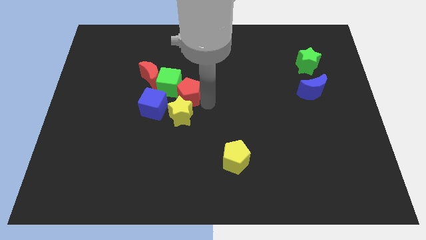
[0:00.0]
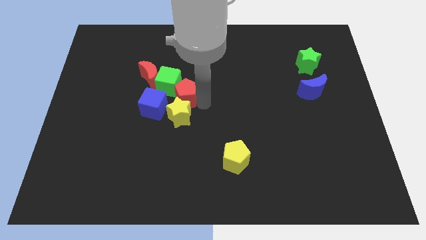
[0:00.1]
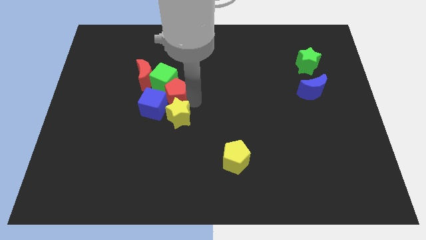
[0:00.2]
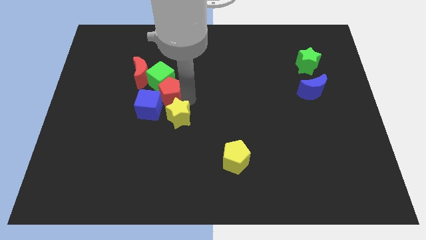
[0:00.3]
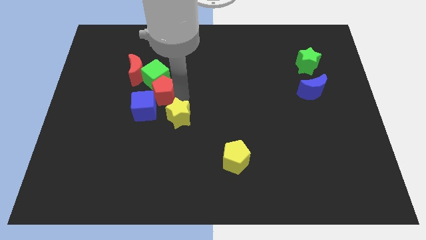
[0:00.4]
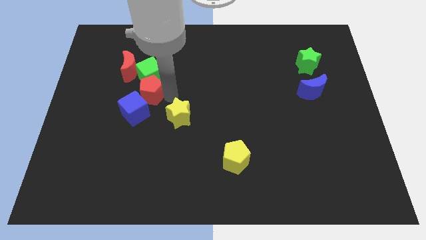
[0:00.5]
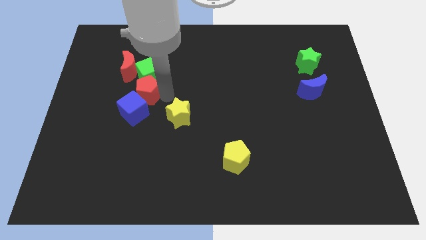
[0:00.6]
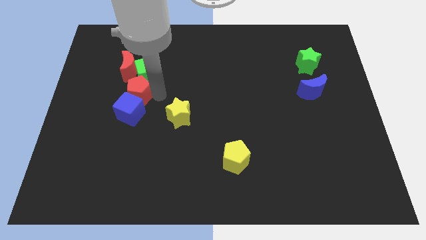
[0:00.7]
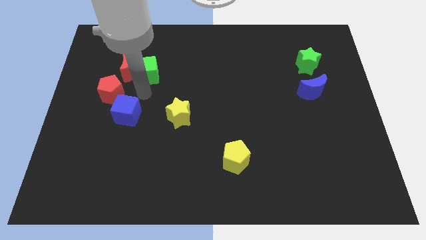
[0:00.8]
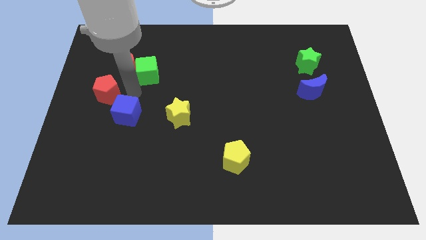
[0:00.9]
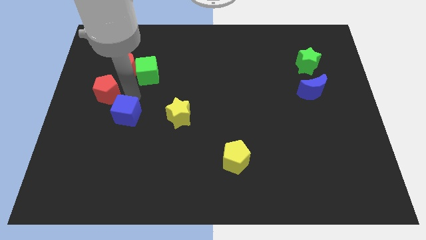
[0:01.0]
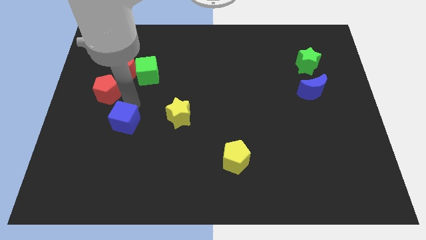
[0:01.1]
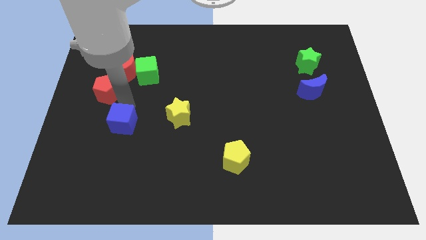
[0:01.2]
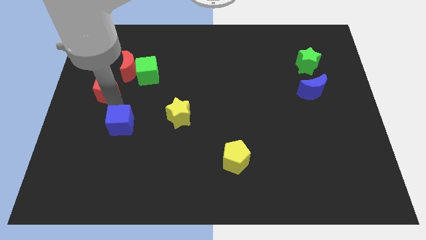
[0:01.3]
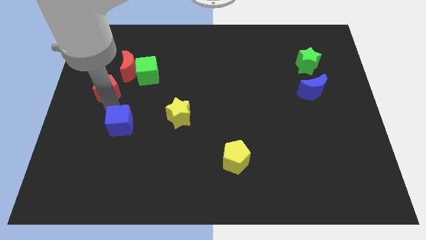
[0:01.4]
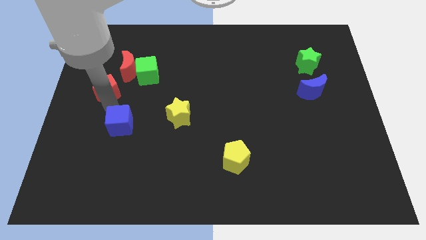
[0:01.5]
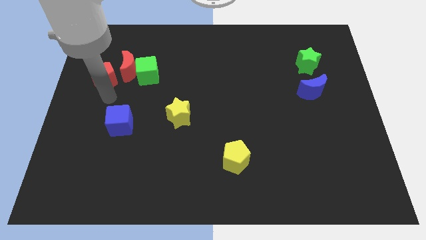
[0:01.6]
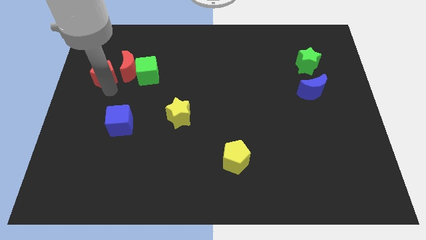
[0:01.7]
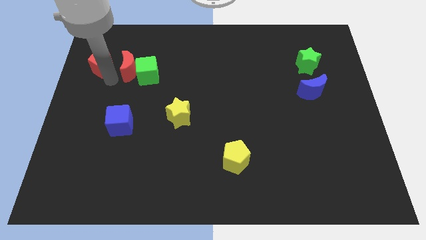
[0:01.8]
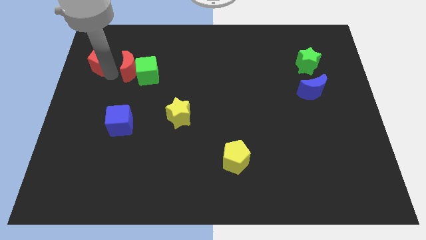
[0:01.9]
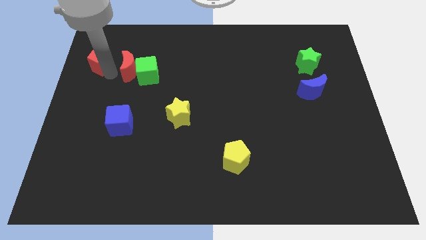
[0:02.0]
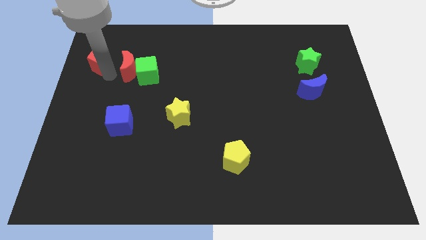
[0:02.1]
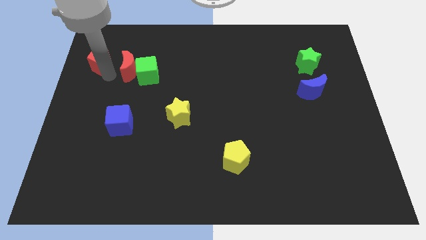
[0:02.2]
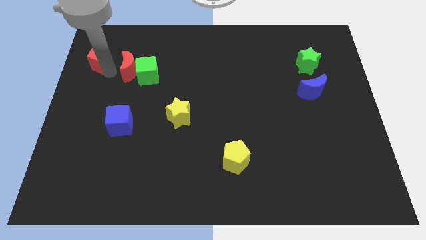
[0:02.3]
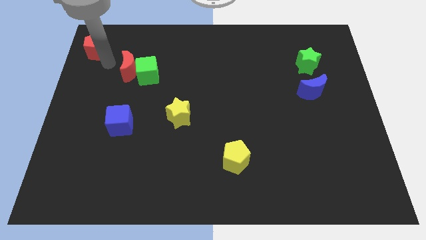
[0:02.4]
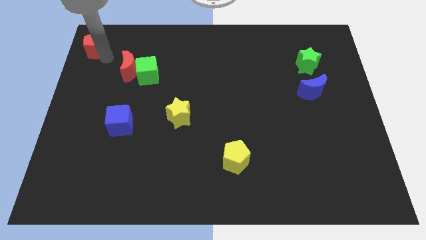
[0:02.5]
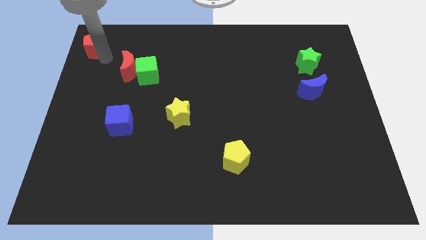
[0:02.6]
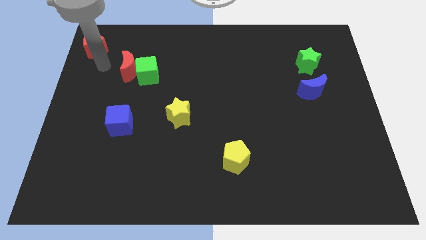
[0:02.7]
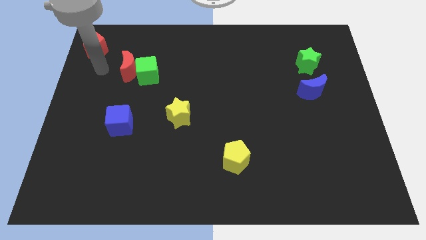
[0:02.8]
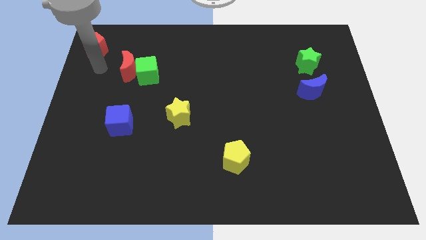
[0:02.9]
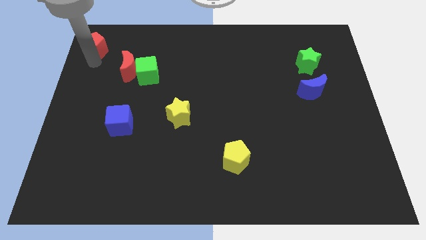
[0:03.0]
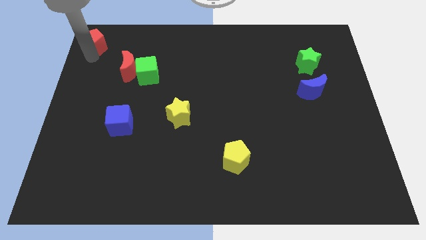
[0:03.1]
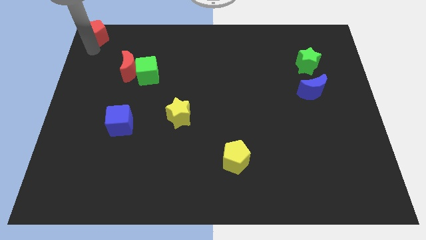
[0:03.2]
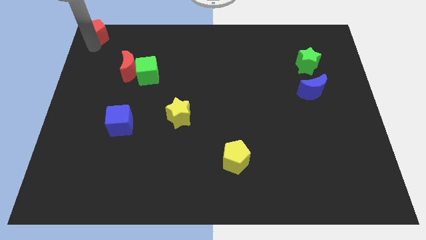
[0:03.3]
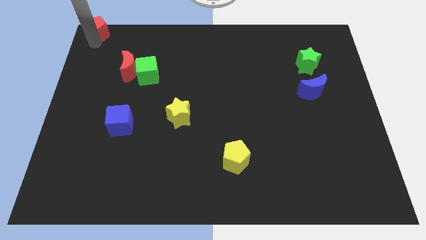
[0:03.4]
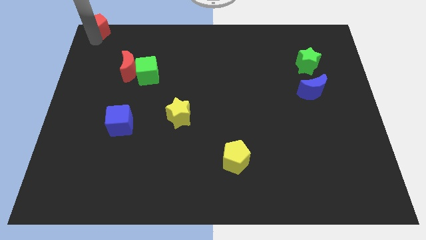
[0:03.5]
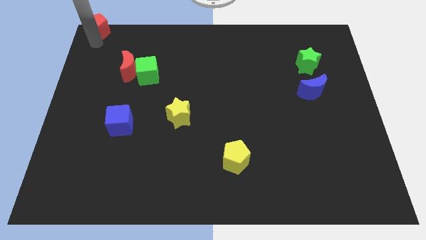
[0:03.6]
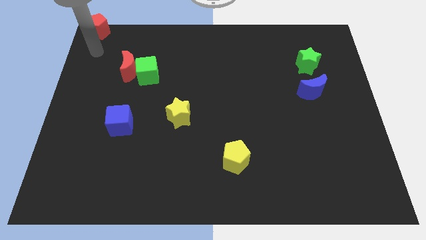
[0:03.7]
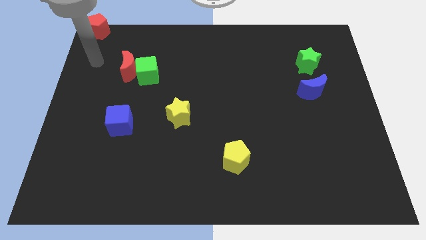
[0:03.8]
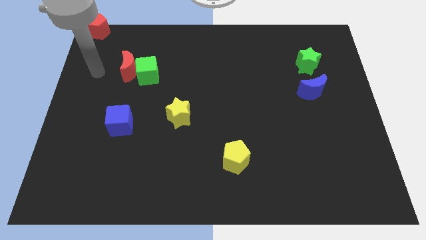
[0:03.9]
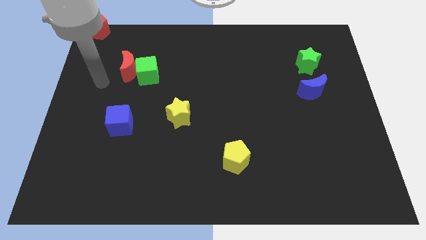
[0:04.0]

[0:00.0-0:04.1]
separate red pentagon from group of block

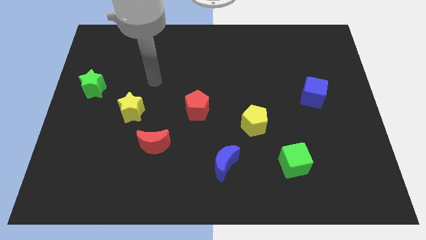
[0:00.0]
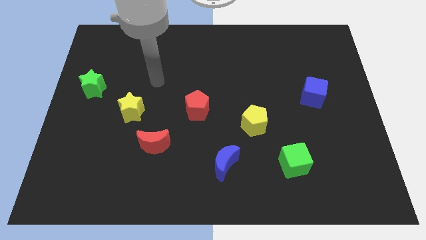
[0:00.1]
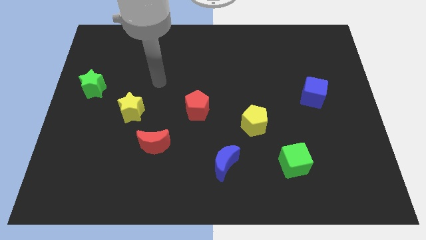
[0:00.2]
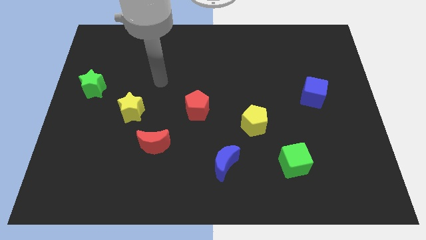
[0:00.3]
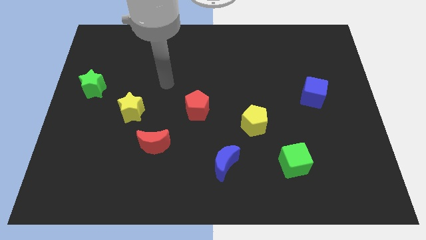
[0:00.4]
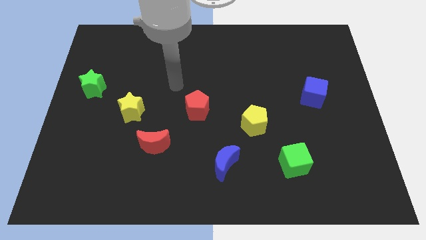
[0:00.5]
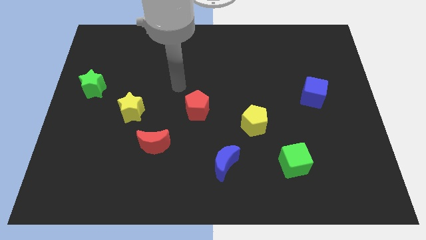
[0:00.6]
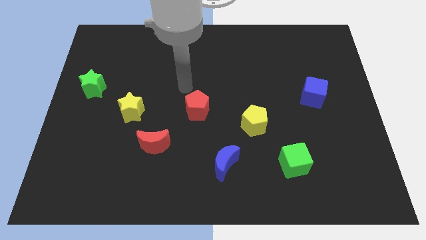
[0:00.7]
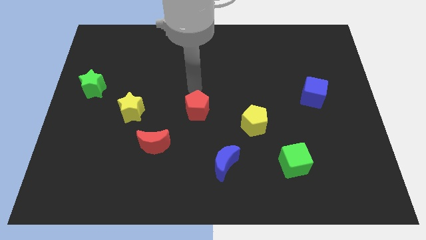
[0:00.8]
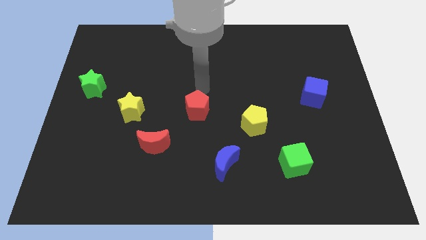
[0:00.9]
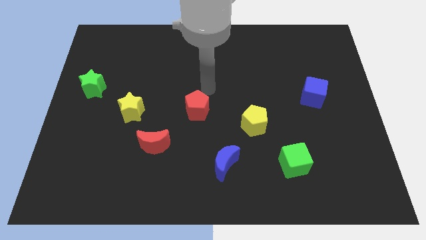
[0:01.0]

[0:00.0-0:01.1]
point your arm above the red pentagon

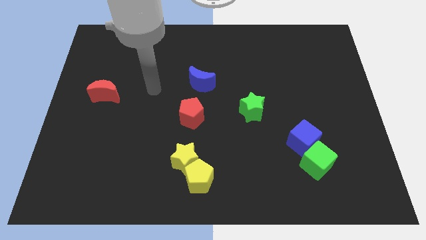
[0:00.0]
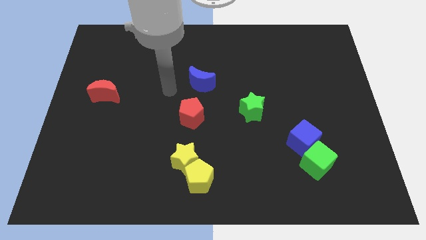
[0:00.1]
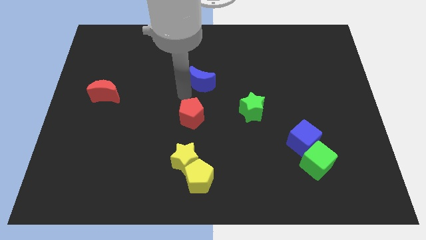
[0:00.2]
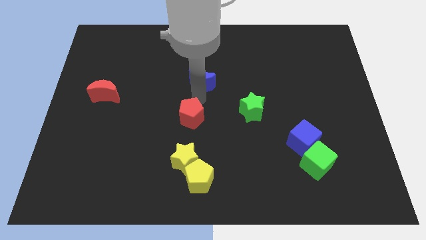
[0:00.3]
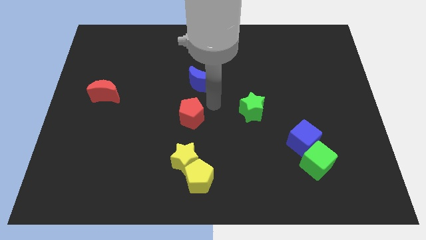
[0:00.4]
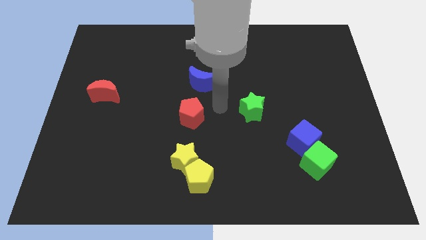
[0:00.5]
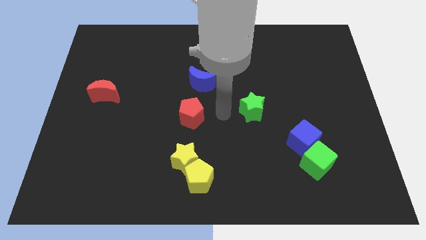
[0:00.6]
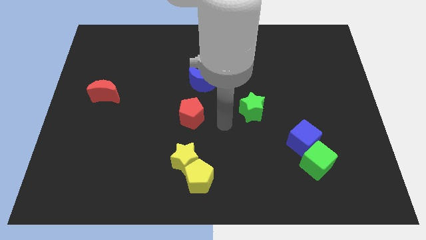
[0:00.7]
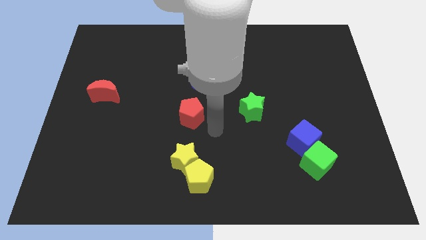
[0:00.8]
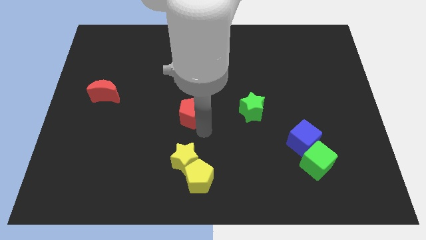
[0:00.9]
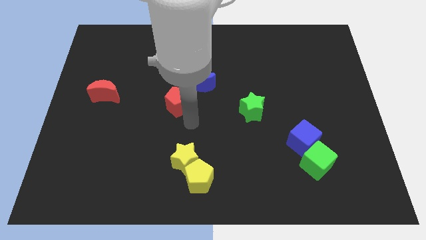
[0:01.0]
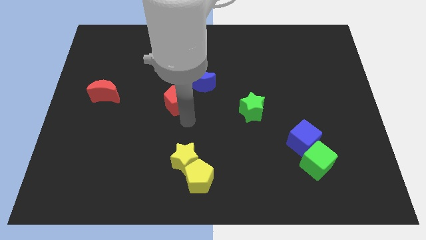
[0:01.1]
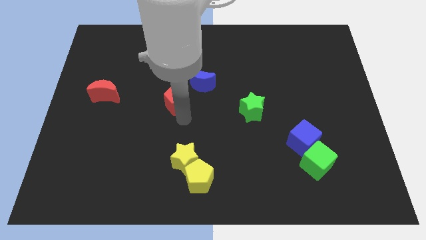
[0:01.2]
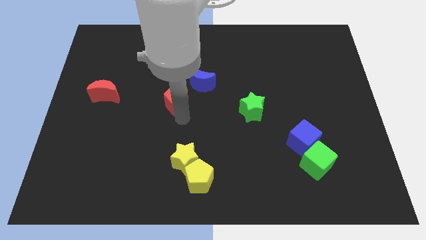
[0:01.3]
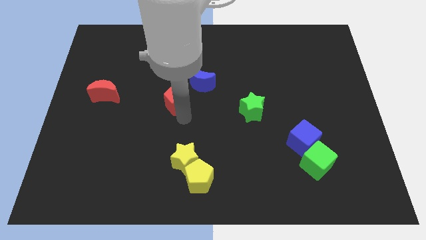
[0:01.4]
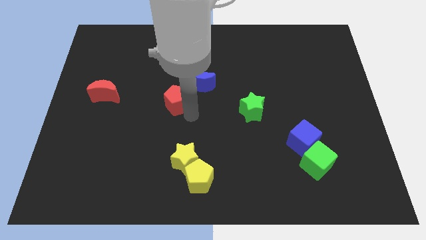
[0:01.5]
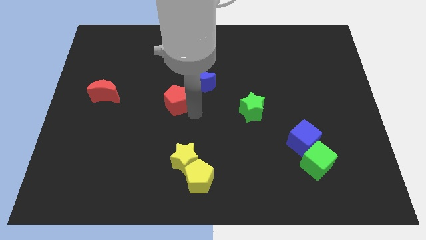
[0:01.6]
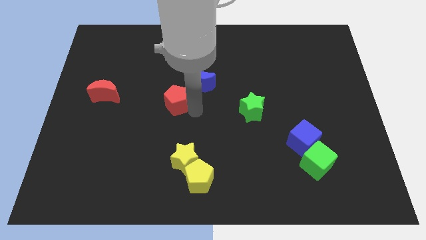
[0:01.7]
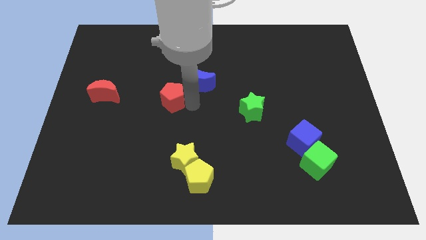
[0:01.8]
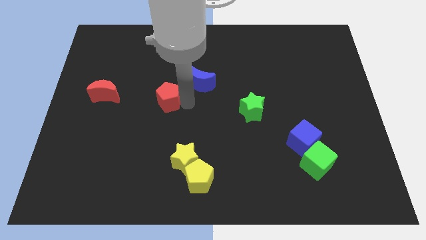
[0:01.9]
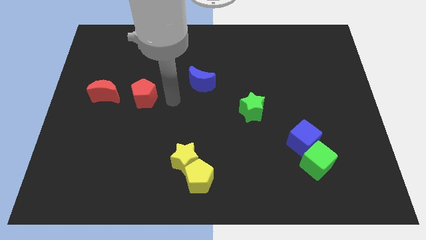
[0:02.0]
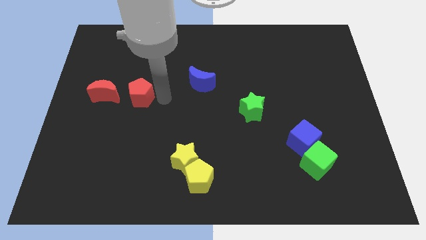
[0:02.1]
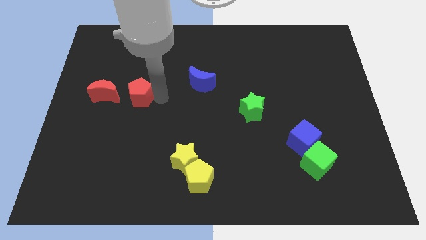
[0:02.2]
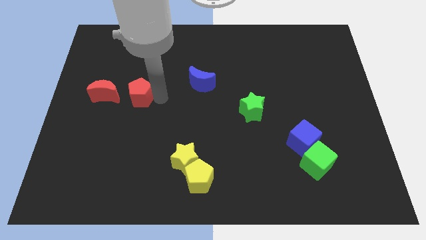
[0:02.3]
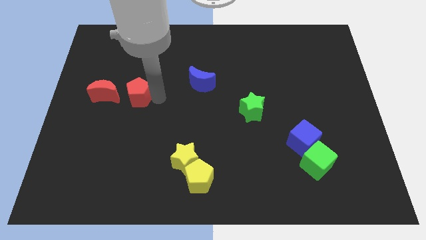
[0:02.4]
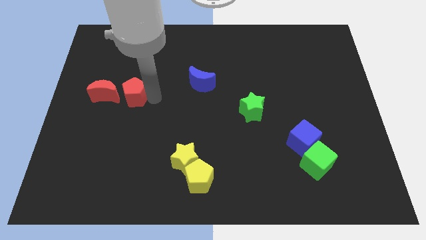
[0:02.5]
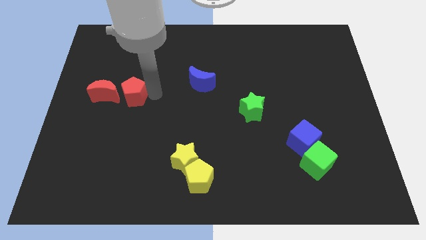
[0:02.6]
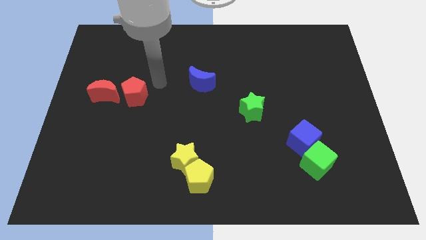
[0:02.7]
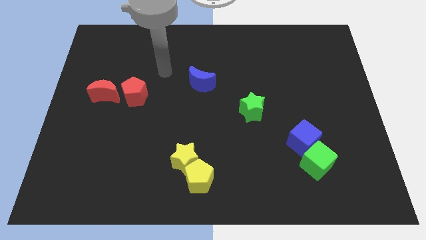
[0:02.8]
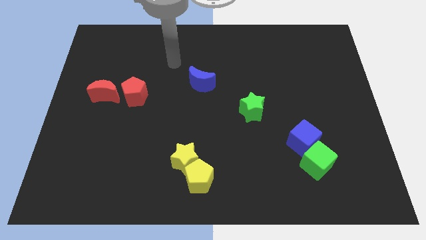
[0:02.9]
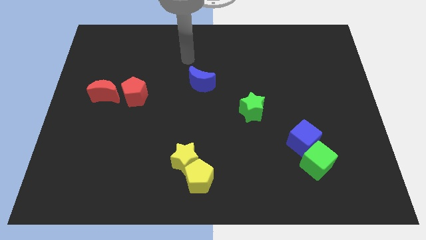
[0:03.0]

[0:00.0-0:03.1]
move red pentagon to the right of the red crescent

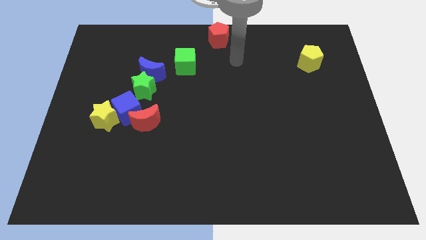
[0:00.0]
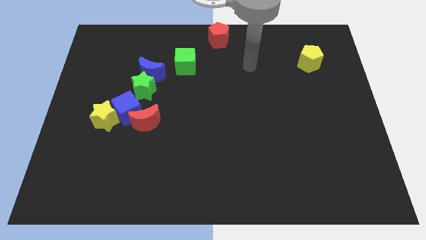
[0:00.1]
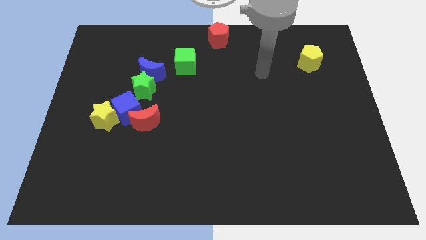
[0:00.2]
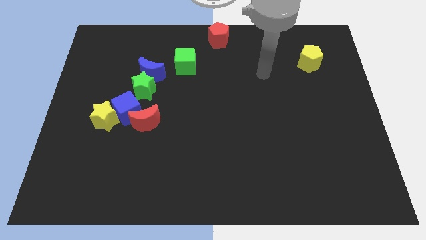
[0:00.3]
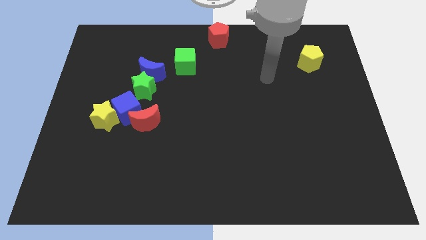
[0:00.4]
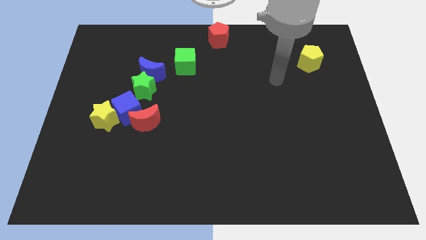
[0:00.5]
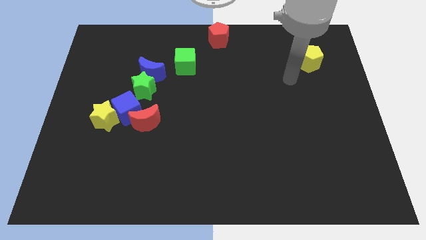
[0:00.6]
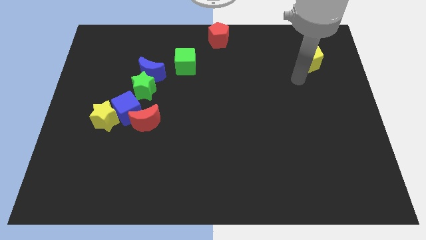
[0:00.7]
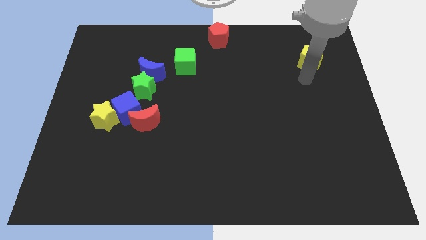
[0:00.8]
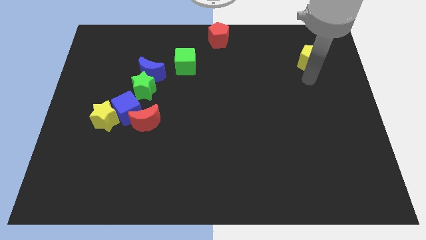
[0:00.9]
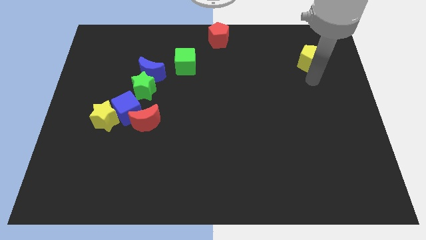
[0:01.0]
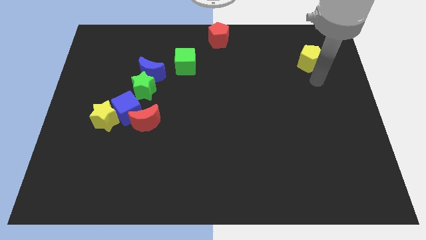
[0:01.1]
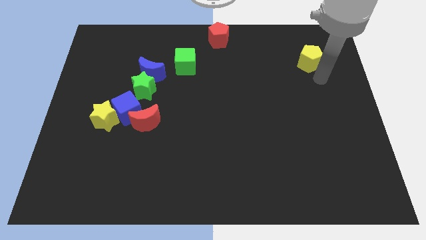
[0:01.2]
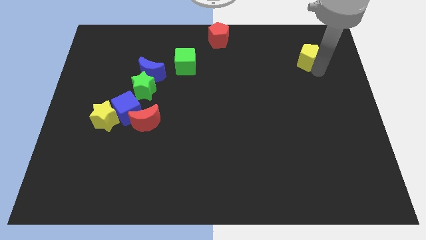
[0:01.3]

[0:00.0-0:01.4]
tap the yellow pentagon
